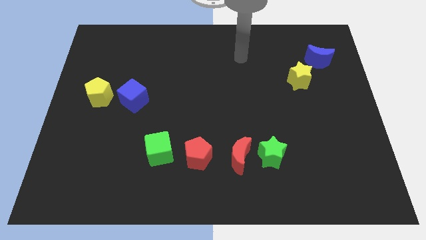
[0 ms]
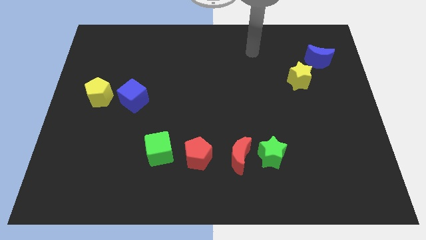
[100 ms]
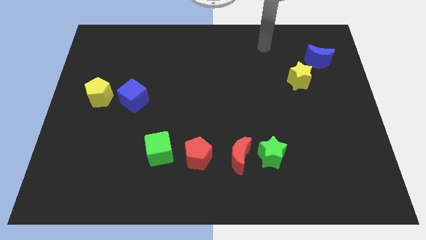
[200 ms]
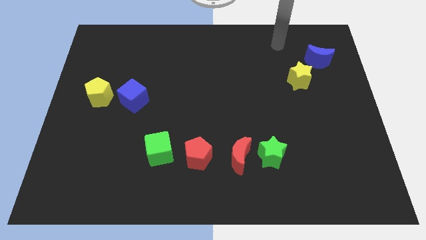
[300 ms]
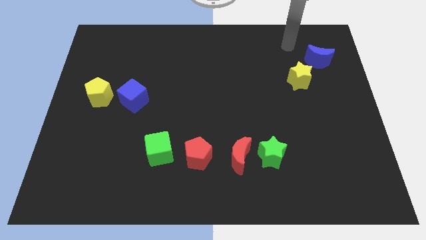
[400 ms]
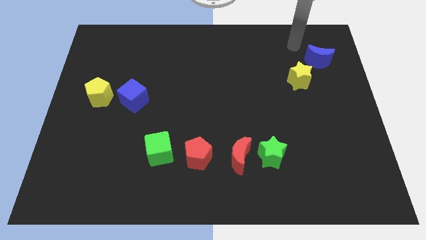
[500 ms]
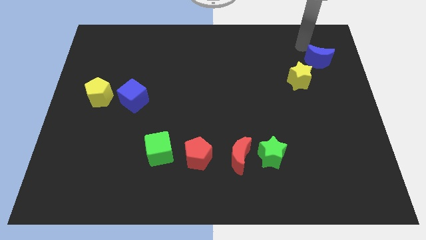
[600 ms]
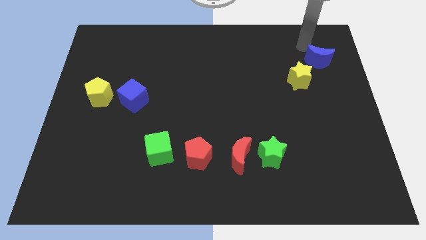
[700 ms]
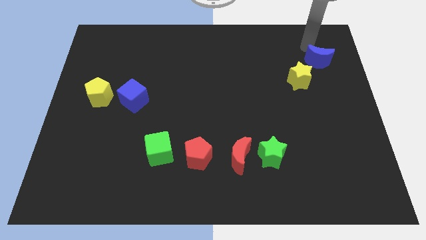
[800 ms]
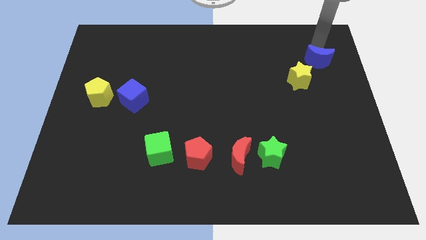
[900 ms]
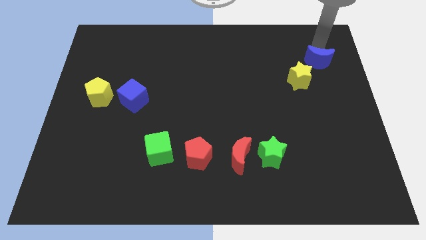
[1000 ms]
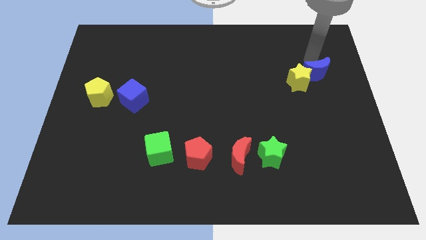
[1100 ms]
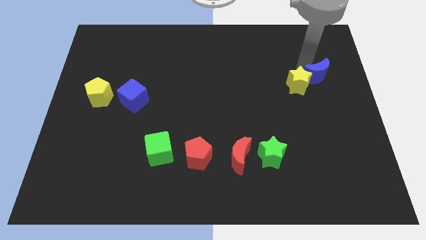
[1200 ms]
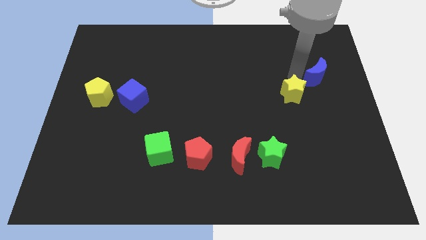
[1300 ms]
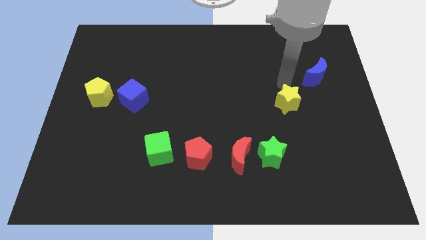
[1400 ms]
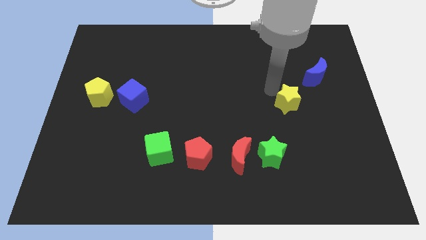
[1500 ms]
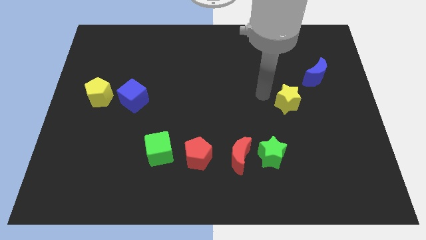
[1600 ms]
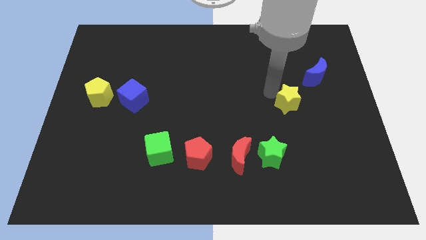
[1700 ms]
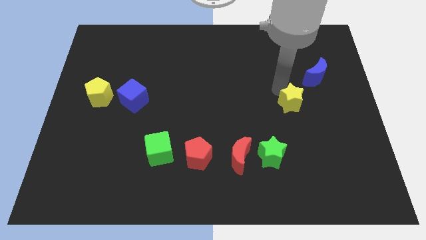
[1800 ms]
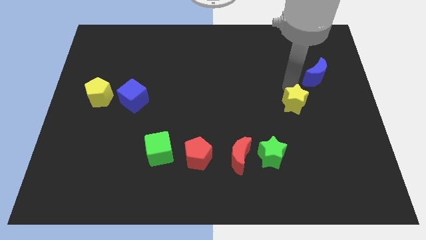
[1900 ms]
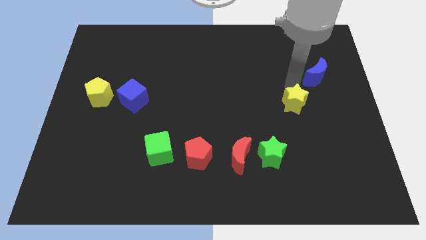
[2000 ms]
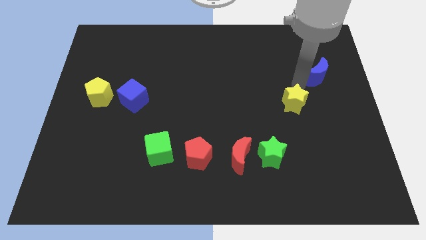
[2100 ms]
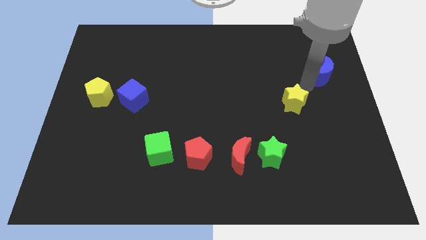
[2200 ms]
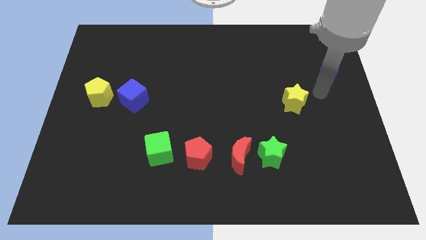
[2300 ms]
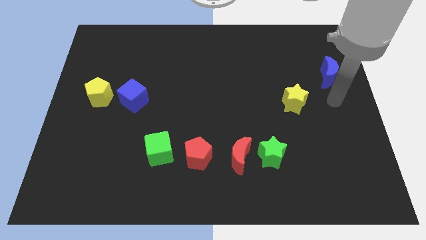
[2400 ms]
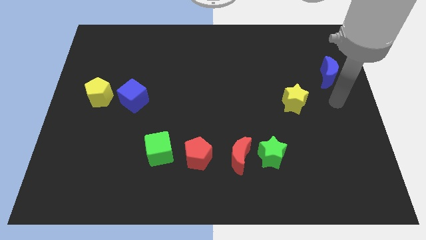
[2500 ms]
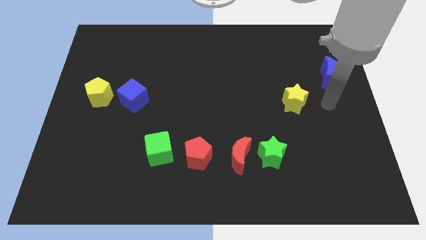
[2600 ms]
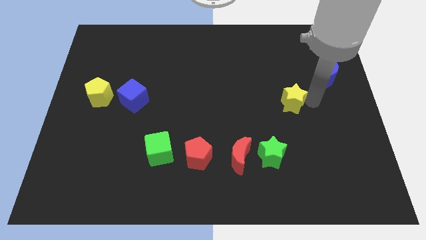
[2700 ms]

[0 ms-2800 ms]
slide the yellow star towards the green star

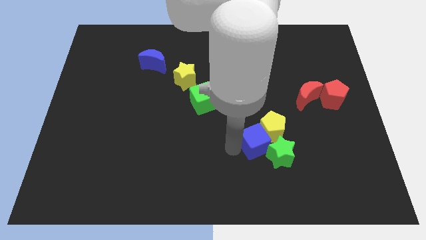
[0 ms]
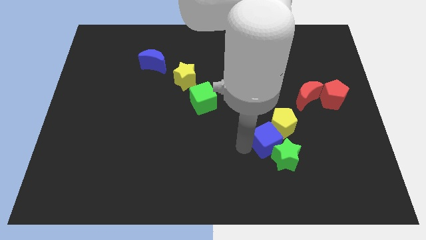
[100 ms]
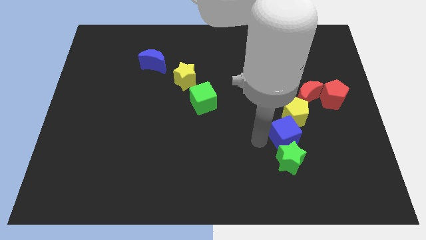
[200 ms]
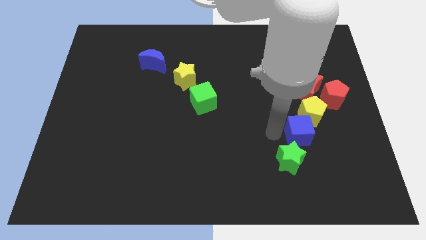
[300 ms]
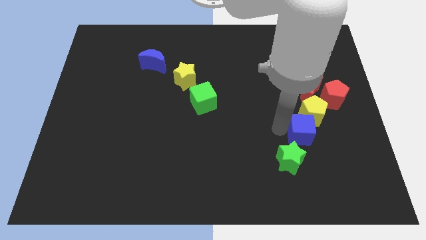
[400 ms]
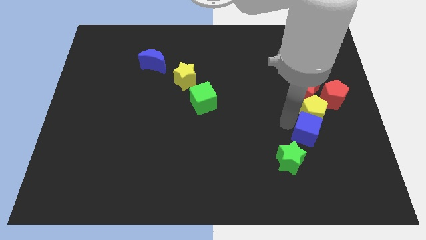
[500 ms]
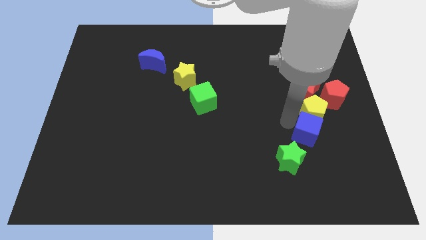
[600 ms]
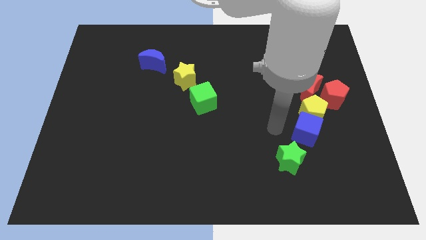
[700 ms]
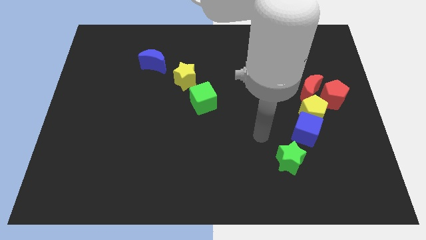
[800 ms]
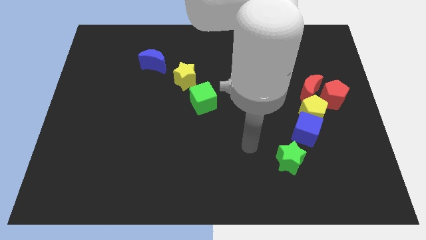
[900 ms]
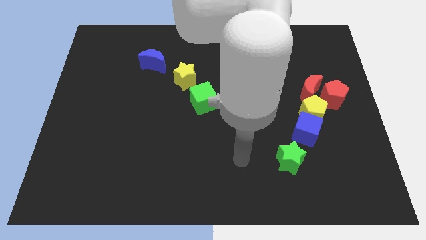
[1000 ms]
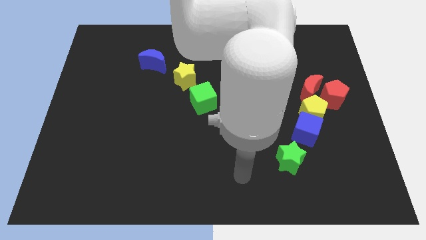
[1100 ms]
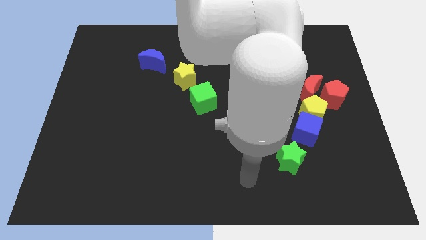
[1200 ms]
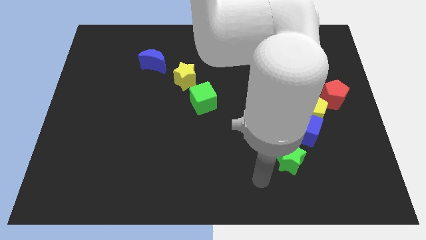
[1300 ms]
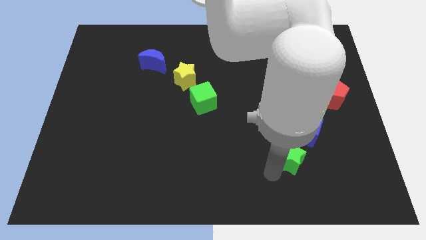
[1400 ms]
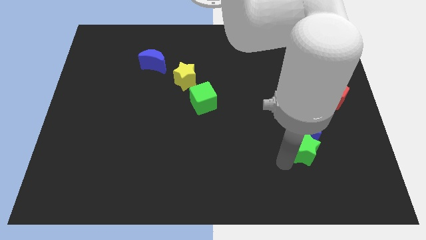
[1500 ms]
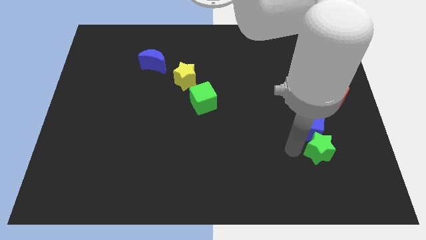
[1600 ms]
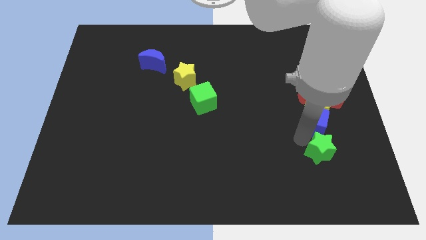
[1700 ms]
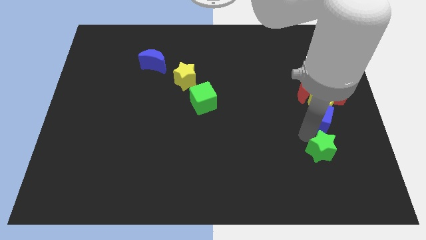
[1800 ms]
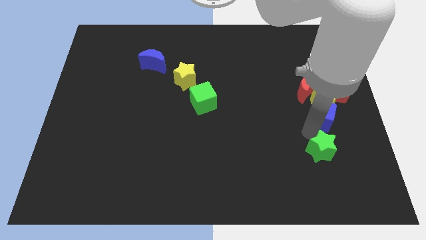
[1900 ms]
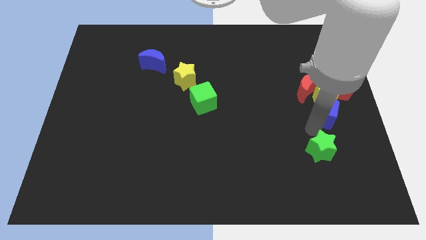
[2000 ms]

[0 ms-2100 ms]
place the yellow pentagon in between the red blocks

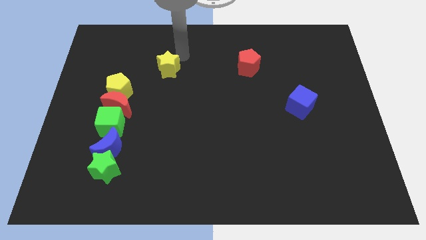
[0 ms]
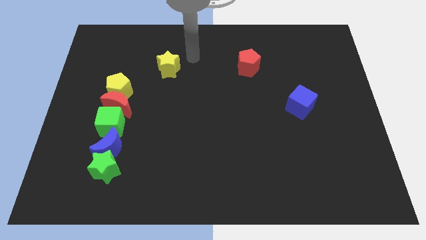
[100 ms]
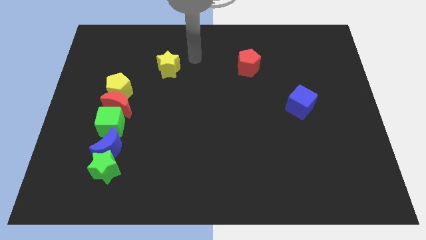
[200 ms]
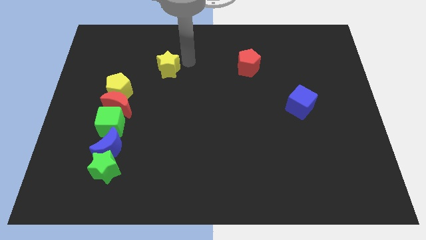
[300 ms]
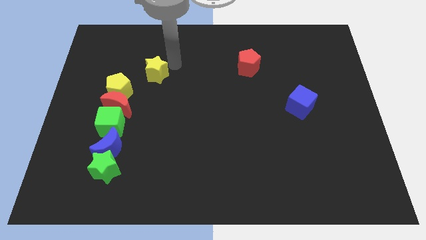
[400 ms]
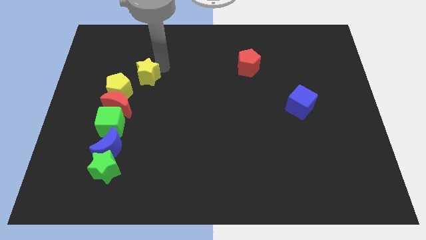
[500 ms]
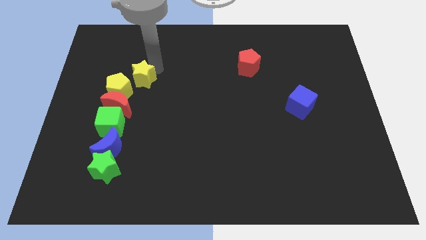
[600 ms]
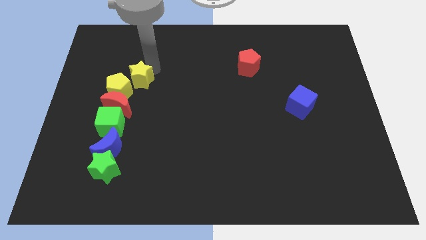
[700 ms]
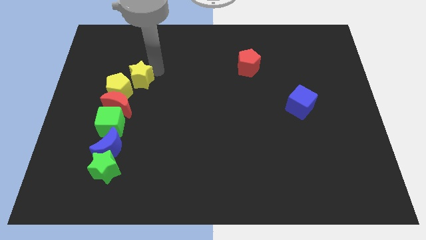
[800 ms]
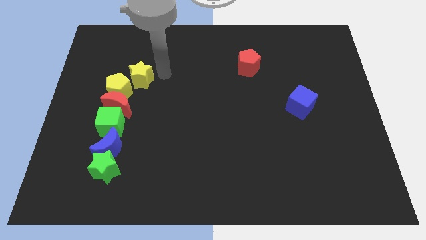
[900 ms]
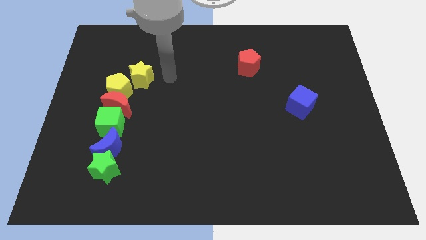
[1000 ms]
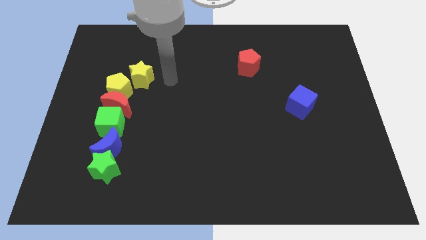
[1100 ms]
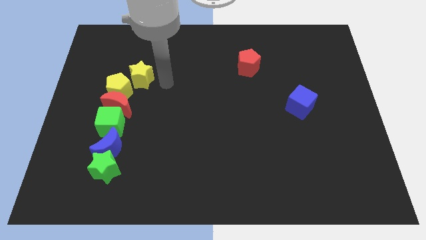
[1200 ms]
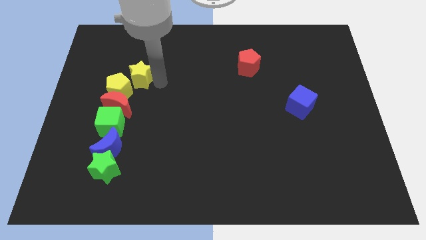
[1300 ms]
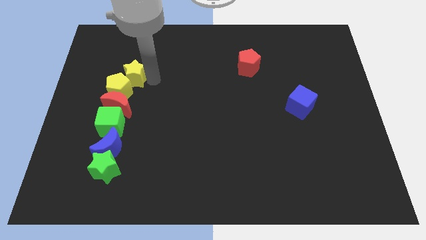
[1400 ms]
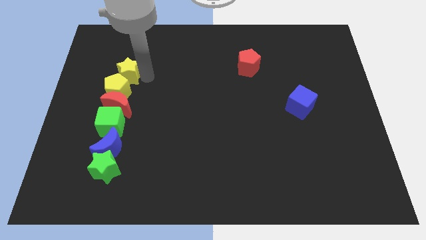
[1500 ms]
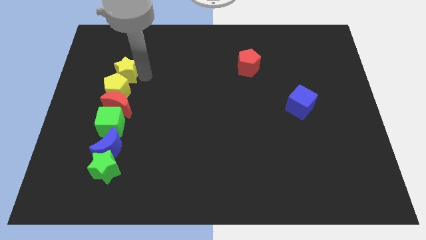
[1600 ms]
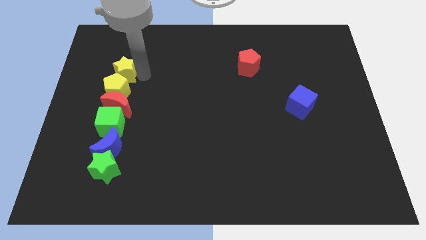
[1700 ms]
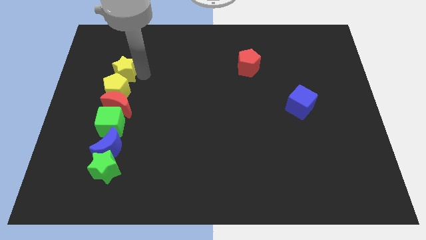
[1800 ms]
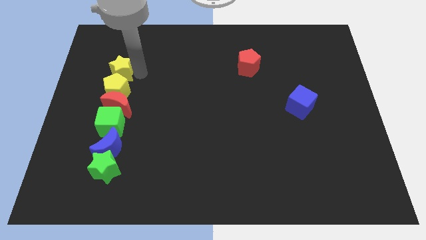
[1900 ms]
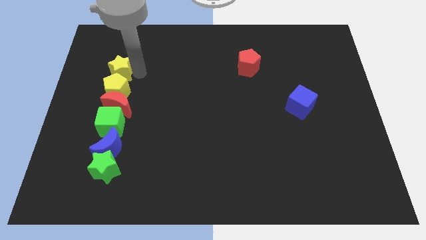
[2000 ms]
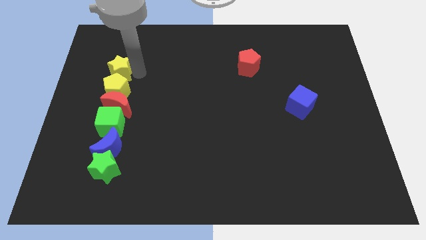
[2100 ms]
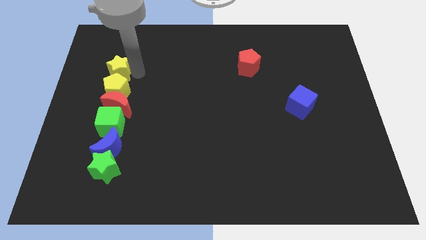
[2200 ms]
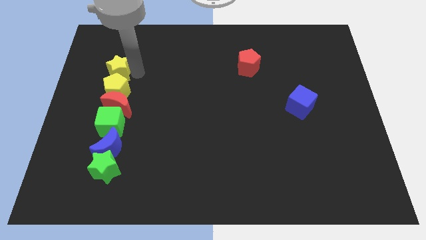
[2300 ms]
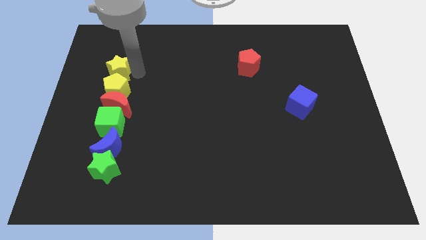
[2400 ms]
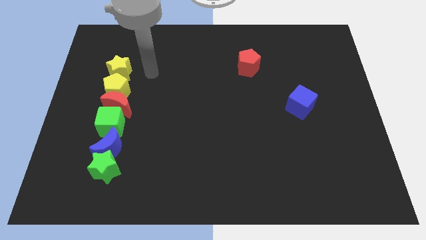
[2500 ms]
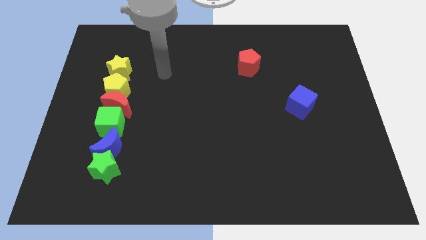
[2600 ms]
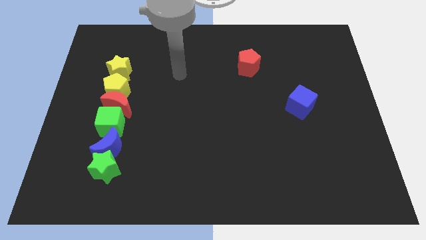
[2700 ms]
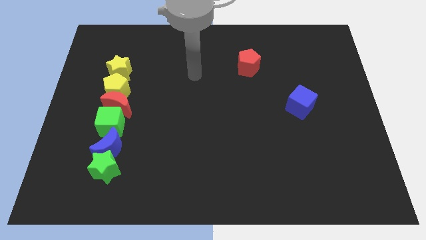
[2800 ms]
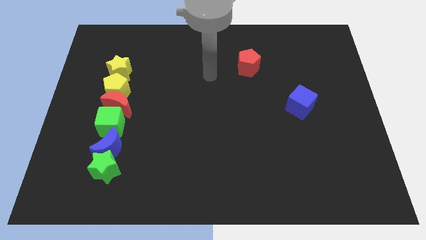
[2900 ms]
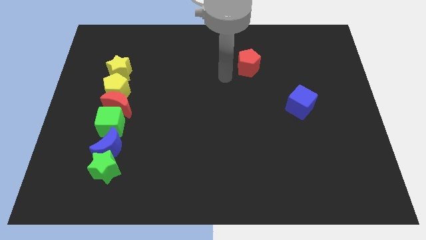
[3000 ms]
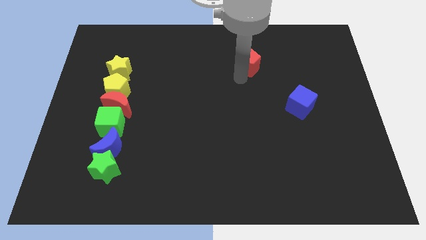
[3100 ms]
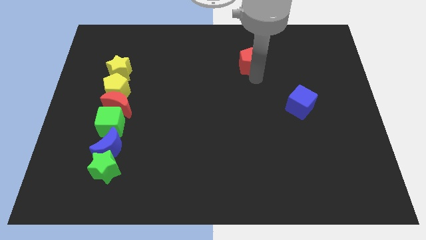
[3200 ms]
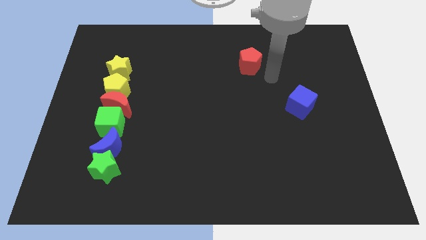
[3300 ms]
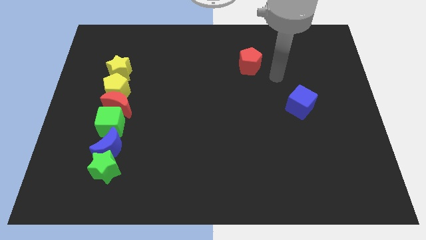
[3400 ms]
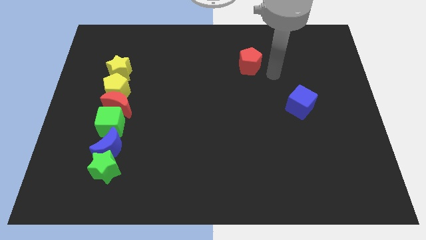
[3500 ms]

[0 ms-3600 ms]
place yellow star above the yellow pentagon

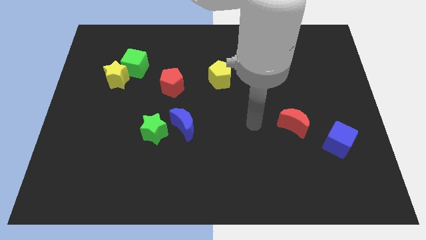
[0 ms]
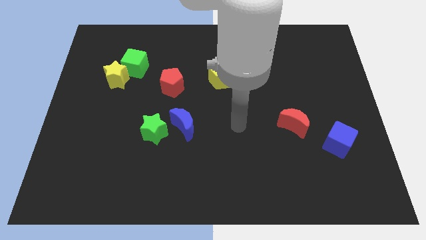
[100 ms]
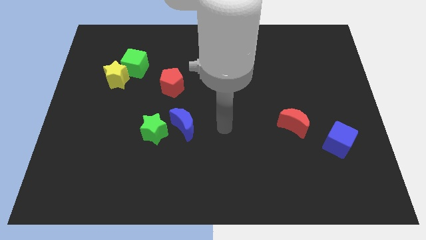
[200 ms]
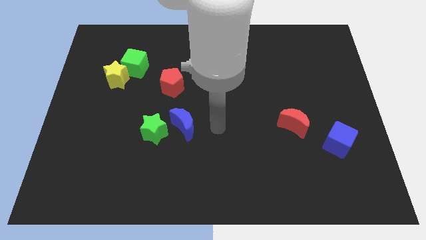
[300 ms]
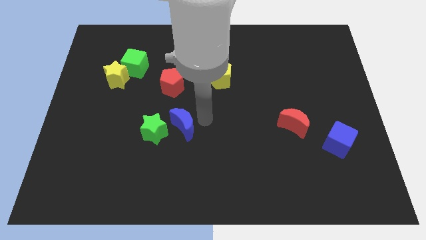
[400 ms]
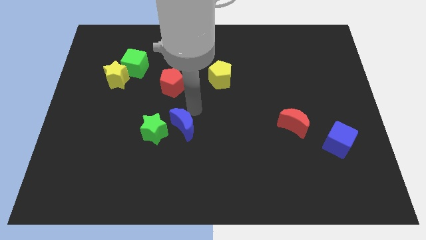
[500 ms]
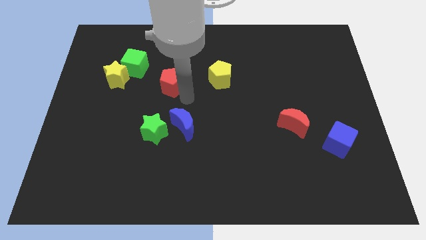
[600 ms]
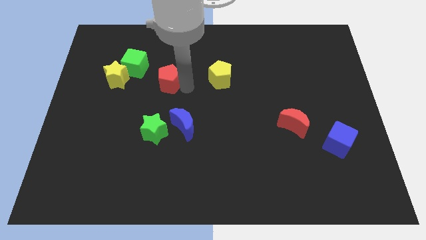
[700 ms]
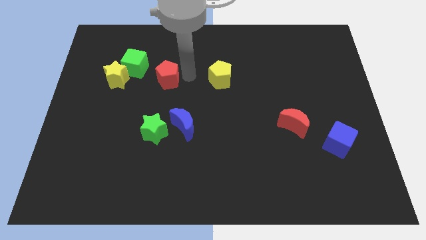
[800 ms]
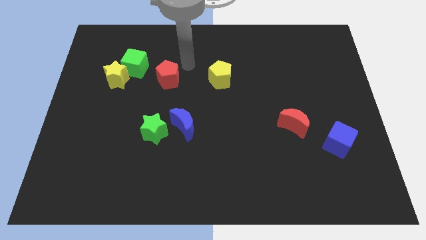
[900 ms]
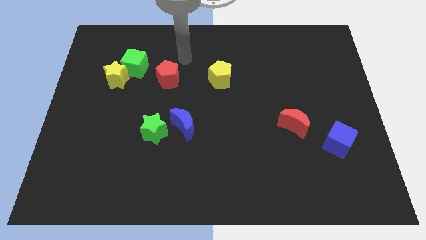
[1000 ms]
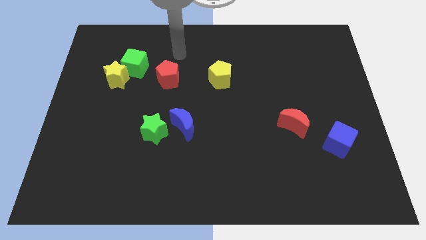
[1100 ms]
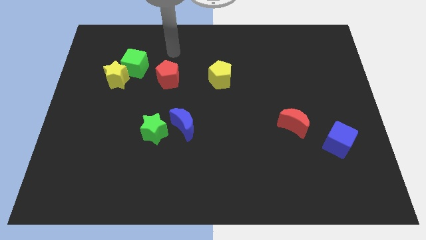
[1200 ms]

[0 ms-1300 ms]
push the red pentagon slightly to the top
